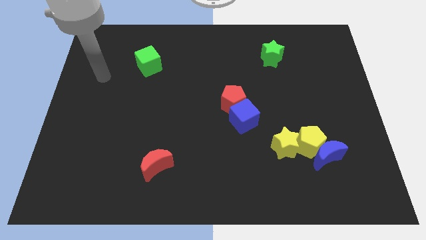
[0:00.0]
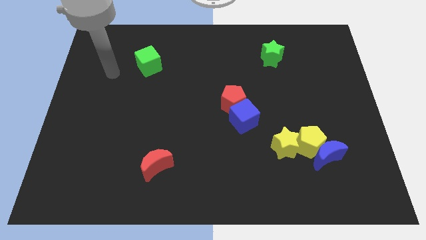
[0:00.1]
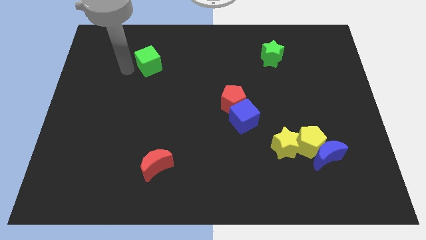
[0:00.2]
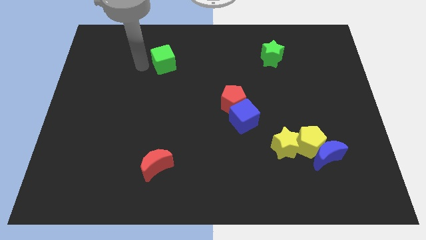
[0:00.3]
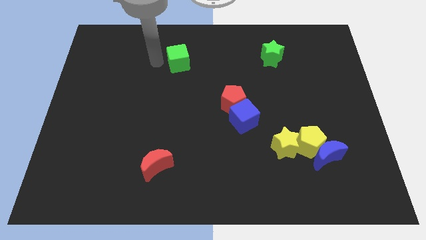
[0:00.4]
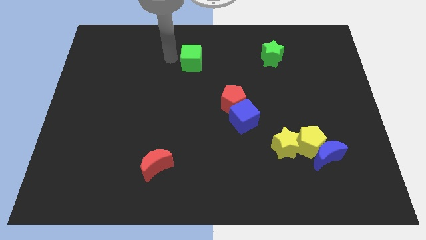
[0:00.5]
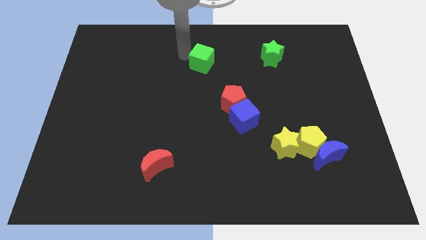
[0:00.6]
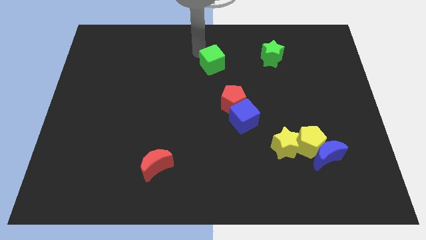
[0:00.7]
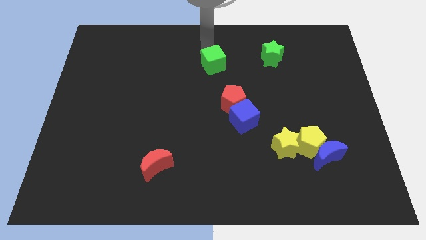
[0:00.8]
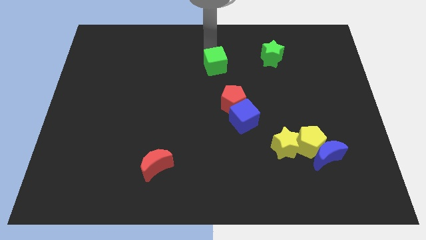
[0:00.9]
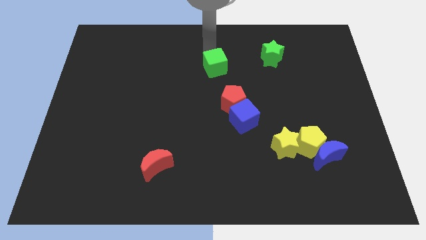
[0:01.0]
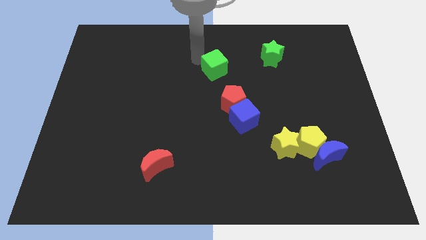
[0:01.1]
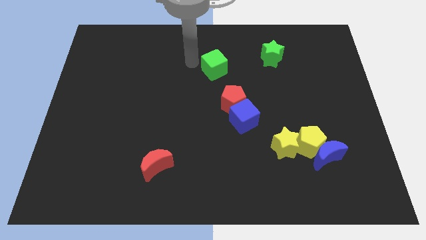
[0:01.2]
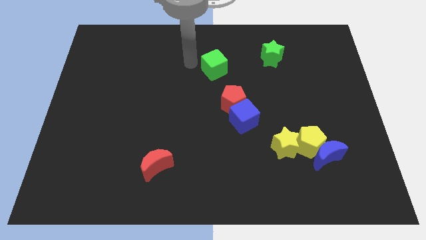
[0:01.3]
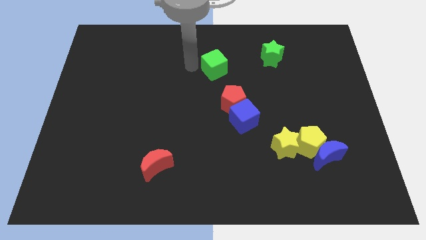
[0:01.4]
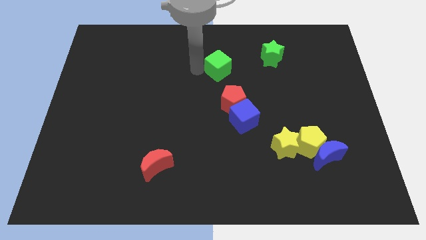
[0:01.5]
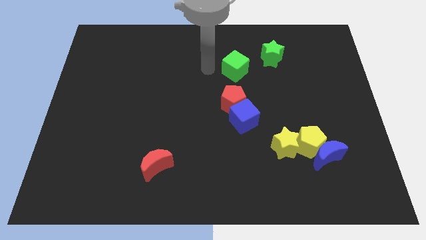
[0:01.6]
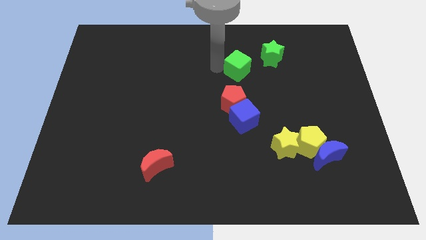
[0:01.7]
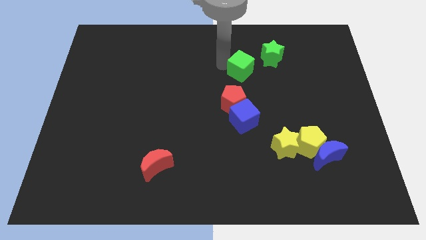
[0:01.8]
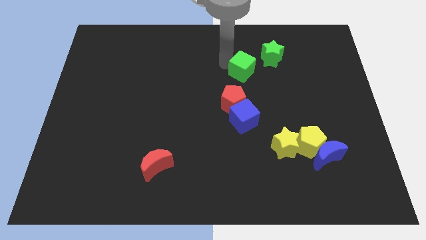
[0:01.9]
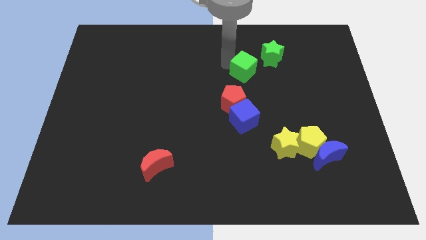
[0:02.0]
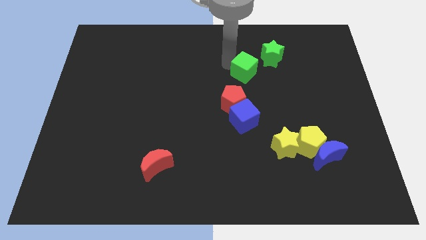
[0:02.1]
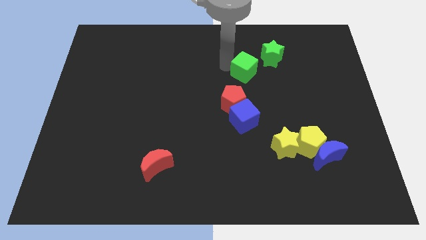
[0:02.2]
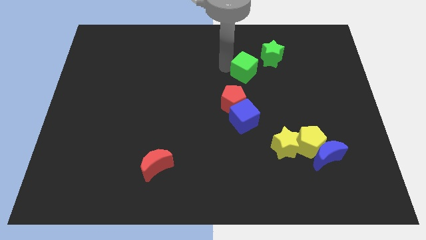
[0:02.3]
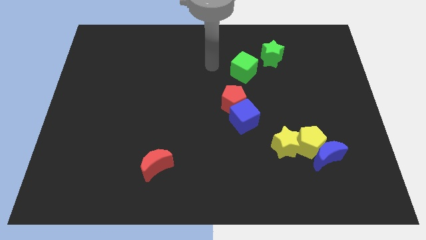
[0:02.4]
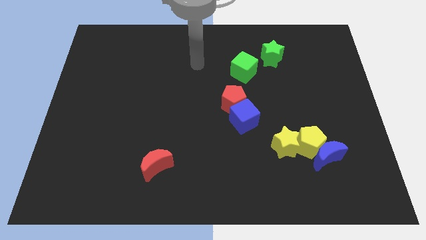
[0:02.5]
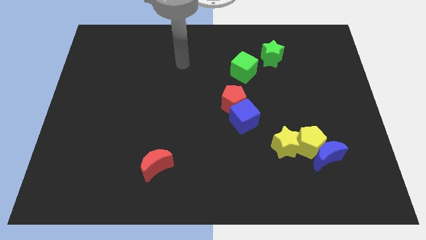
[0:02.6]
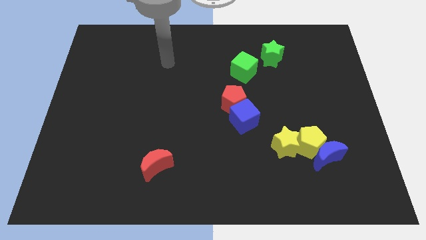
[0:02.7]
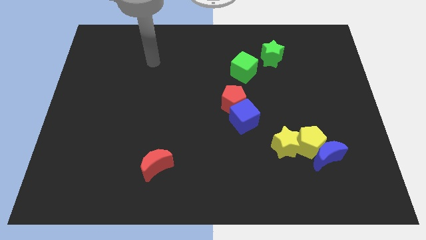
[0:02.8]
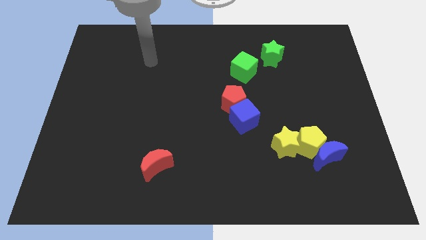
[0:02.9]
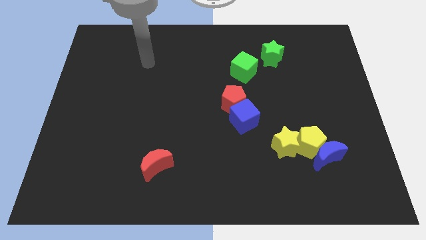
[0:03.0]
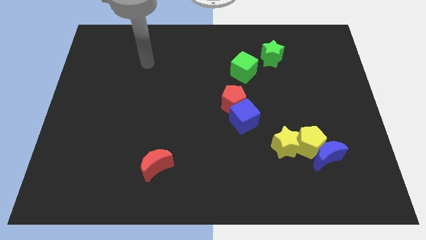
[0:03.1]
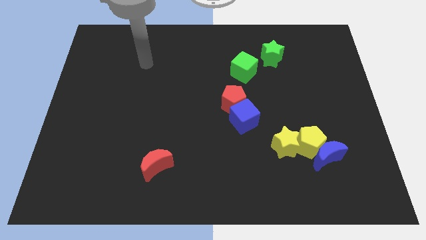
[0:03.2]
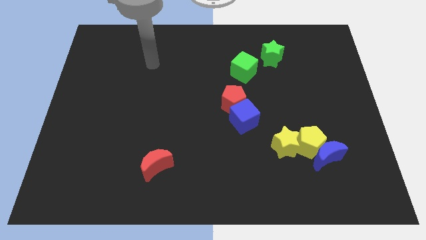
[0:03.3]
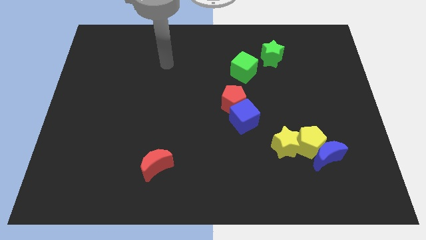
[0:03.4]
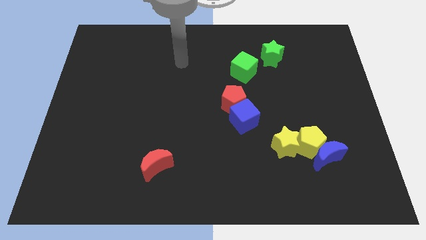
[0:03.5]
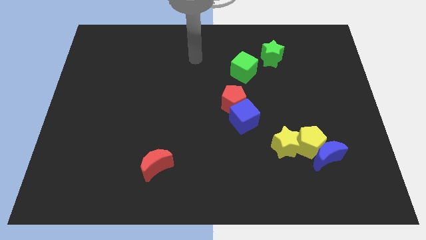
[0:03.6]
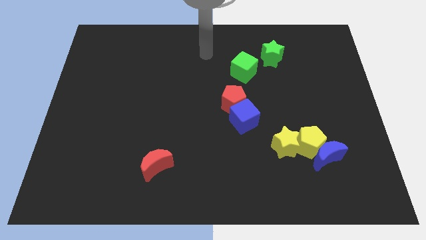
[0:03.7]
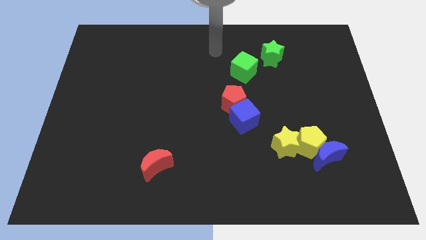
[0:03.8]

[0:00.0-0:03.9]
place green cube close to green star

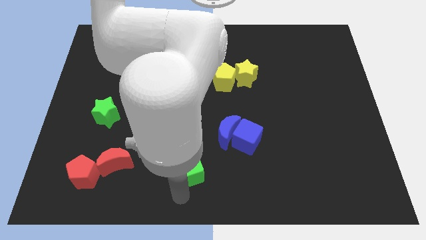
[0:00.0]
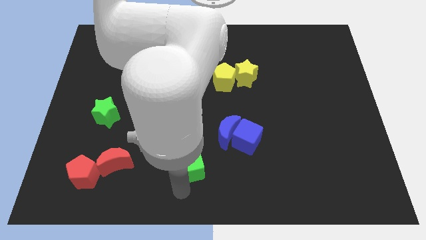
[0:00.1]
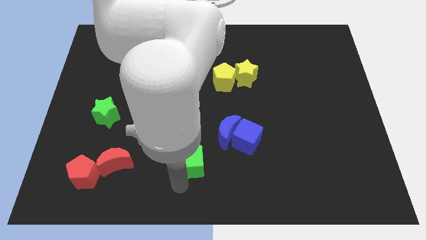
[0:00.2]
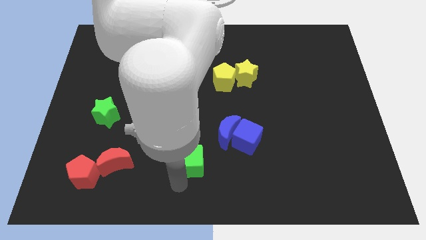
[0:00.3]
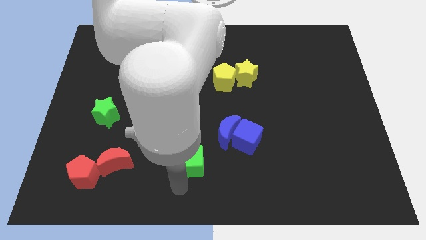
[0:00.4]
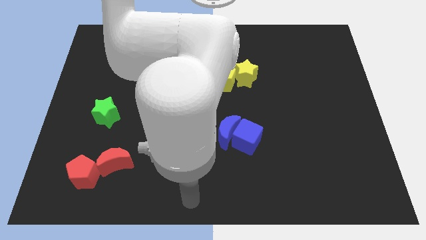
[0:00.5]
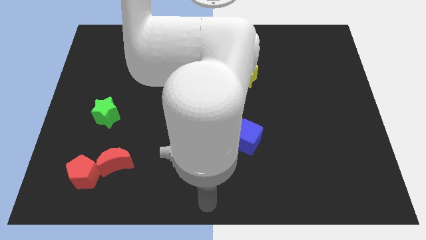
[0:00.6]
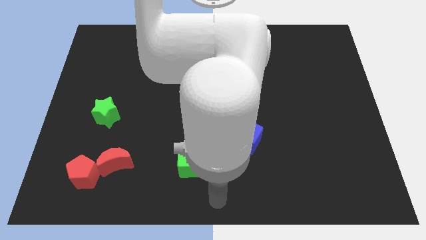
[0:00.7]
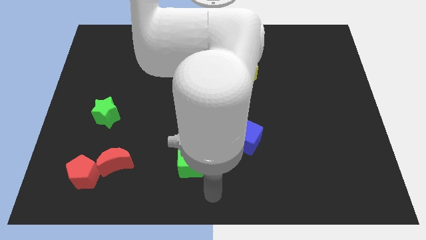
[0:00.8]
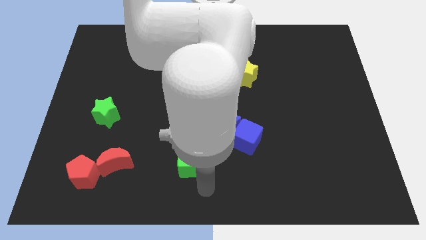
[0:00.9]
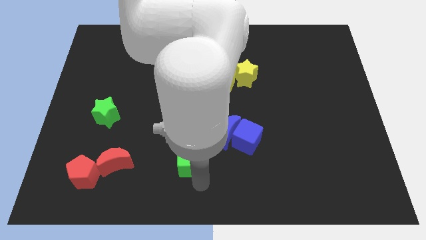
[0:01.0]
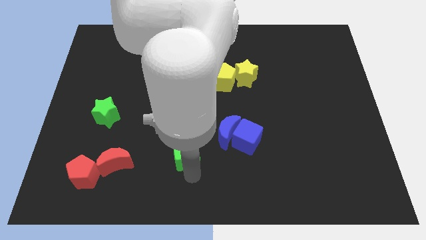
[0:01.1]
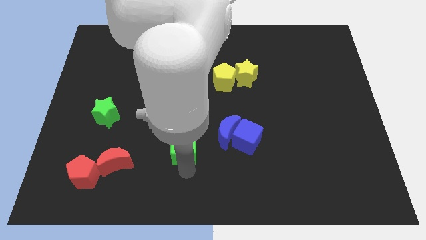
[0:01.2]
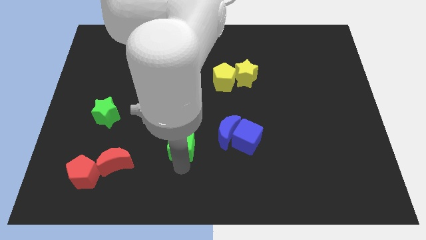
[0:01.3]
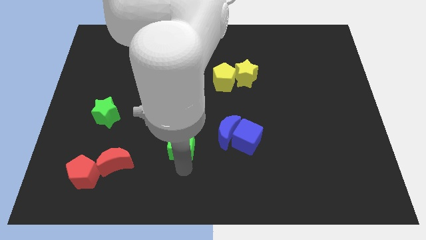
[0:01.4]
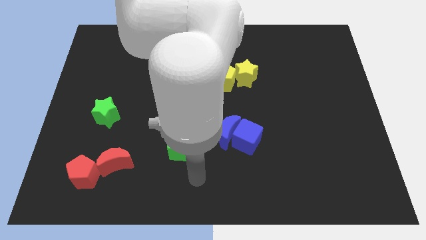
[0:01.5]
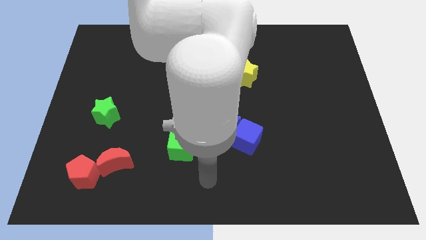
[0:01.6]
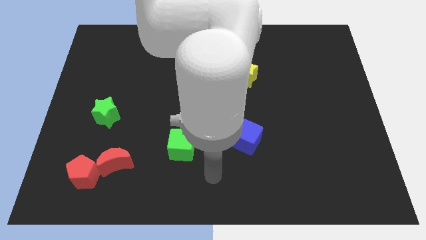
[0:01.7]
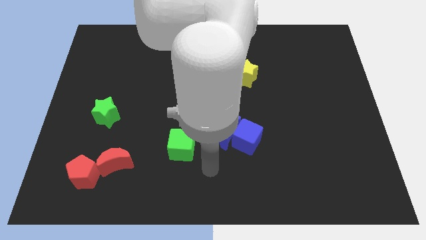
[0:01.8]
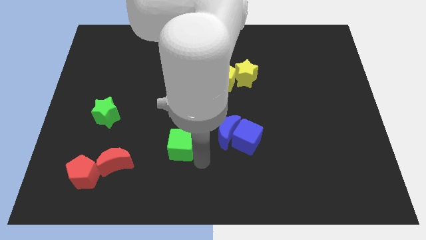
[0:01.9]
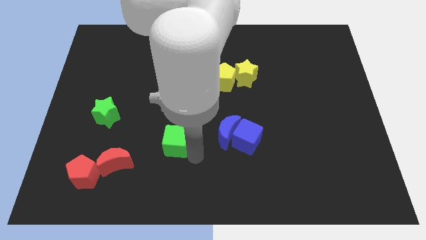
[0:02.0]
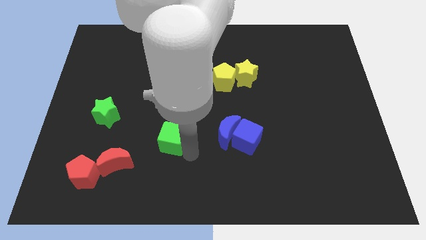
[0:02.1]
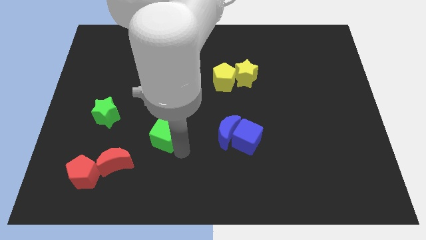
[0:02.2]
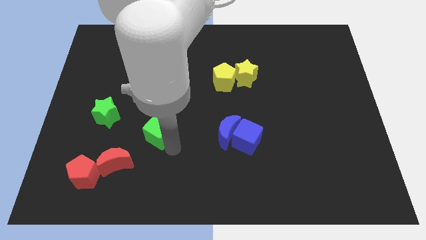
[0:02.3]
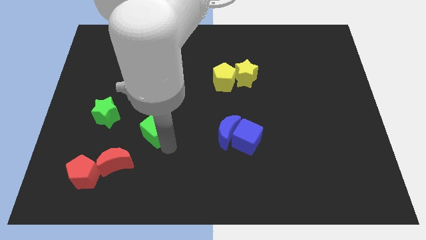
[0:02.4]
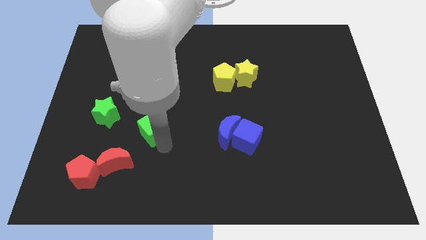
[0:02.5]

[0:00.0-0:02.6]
move the green cube left to the blue moon

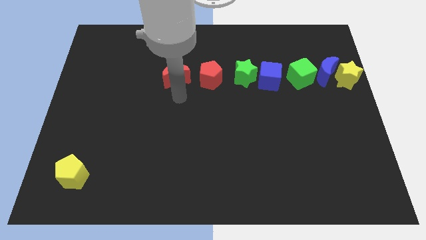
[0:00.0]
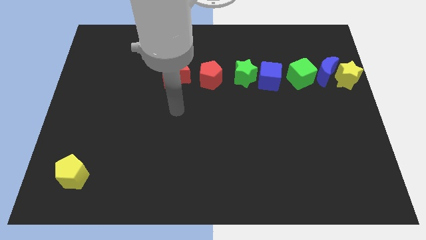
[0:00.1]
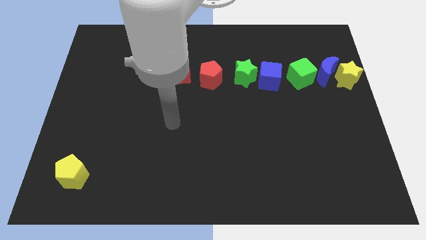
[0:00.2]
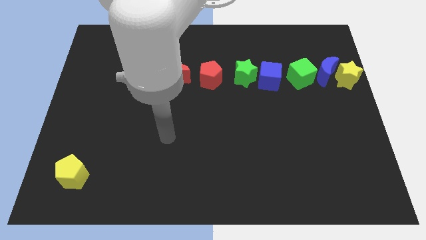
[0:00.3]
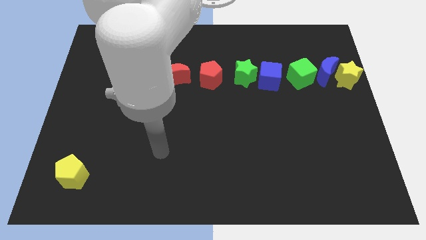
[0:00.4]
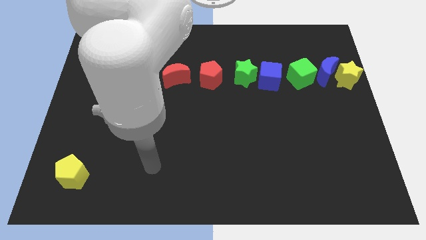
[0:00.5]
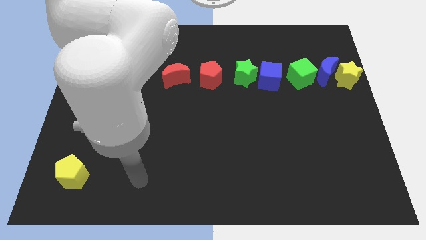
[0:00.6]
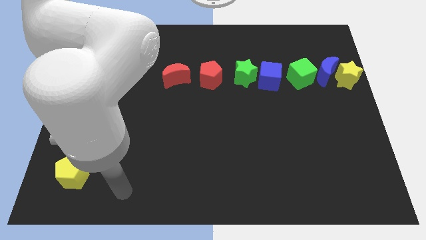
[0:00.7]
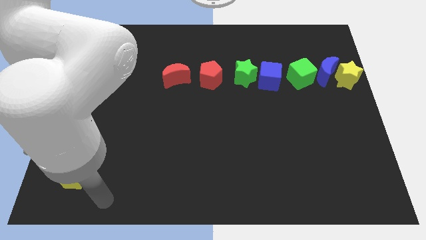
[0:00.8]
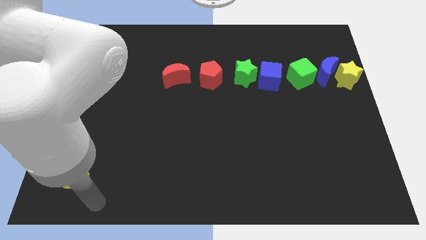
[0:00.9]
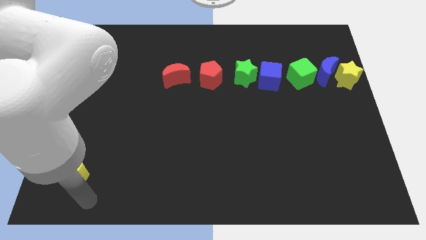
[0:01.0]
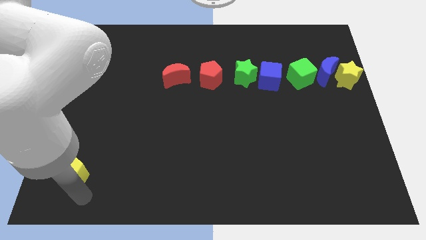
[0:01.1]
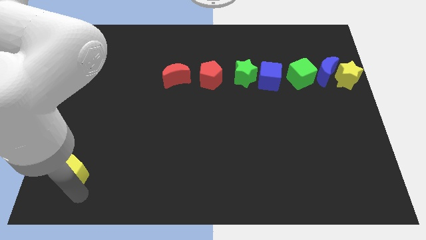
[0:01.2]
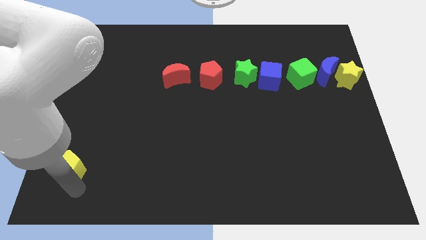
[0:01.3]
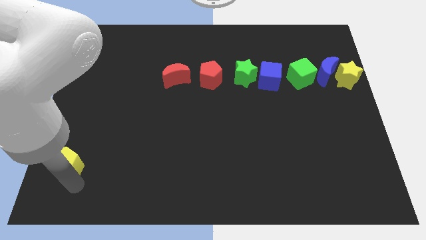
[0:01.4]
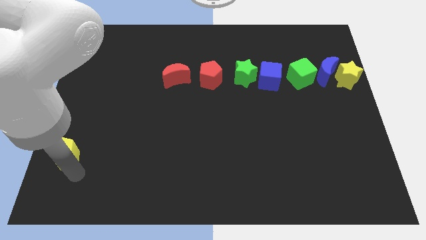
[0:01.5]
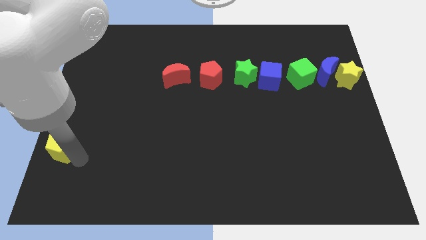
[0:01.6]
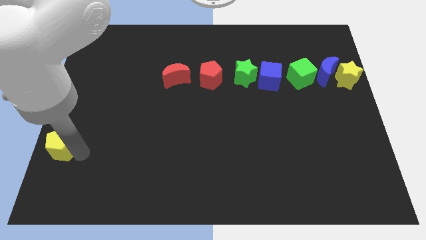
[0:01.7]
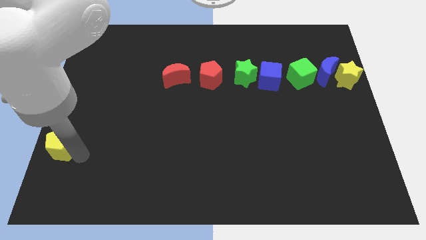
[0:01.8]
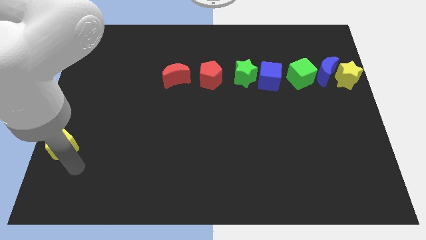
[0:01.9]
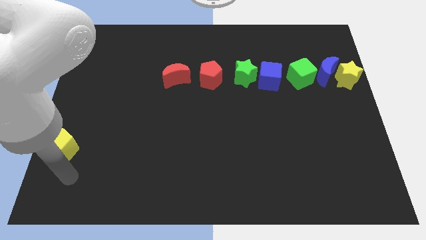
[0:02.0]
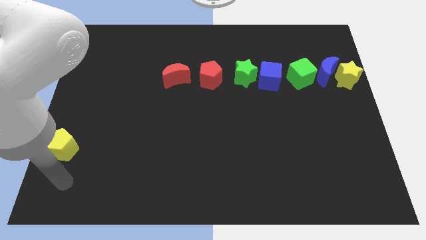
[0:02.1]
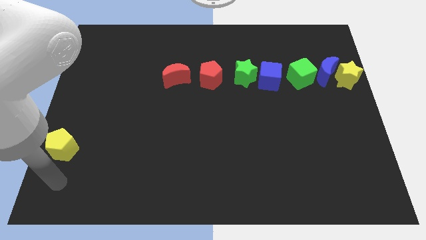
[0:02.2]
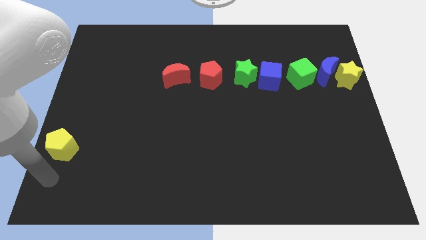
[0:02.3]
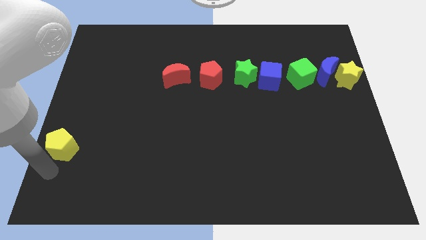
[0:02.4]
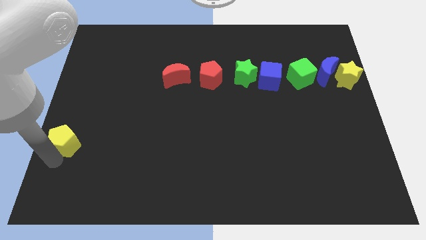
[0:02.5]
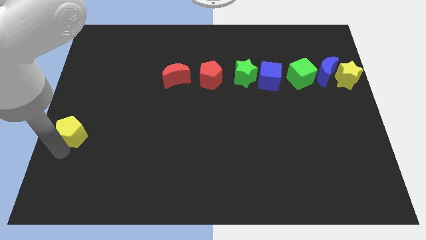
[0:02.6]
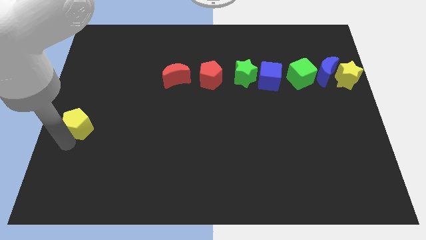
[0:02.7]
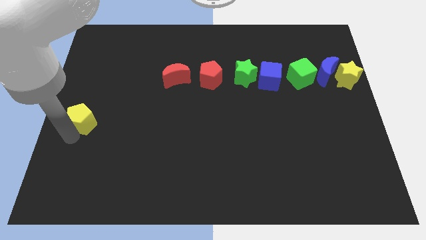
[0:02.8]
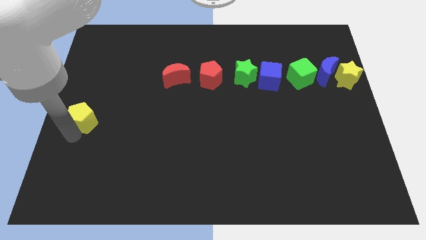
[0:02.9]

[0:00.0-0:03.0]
move the yellow pentagon to the center left of the board
